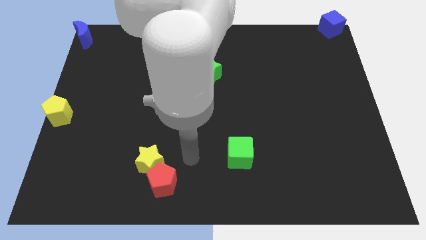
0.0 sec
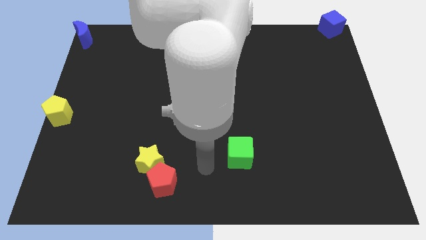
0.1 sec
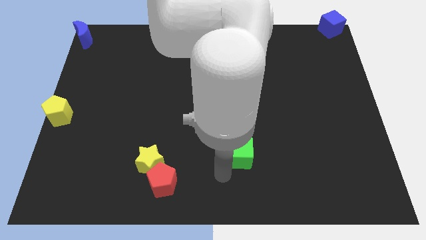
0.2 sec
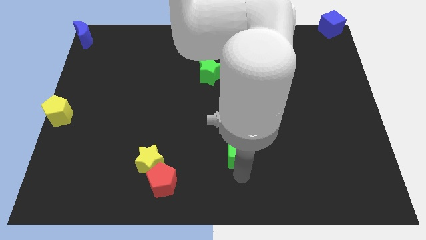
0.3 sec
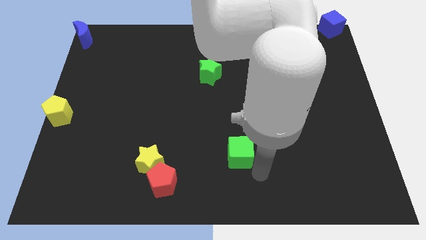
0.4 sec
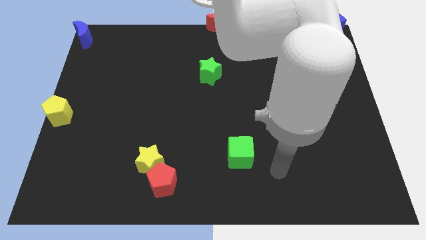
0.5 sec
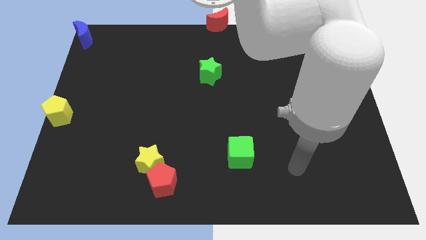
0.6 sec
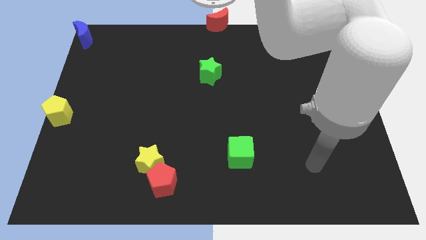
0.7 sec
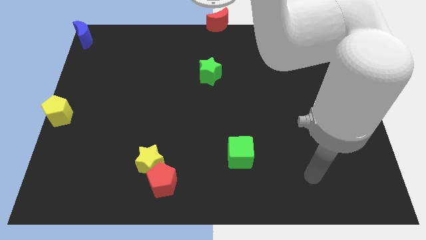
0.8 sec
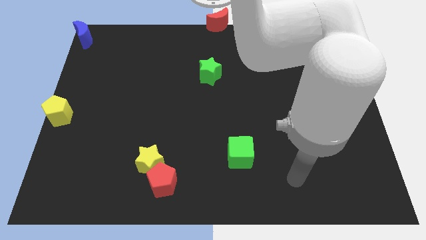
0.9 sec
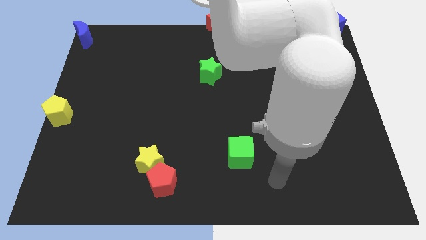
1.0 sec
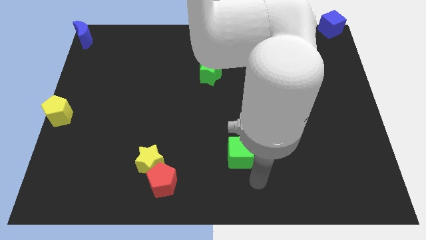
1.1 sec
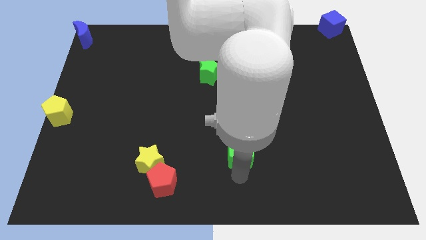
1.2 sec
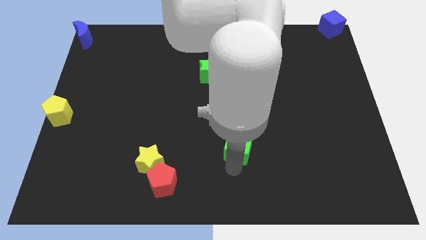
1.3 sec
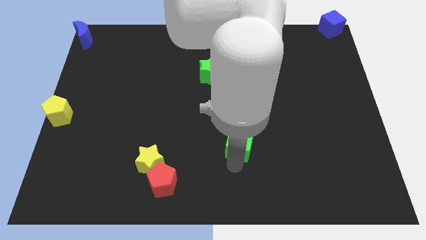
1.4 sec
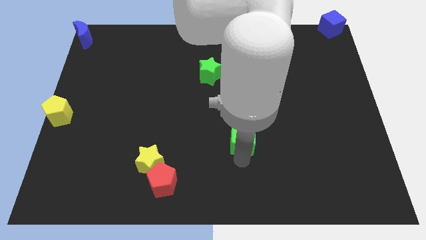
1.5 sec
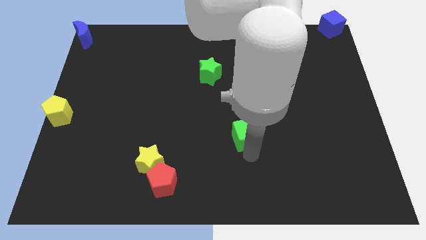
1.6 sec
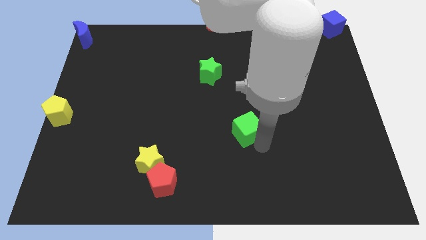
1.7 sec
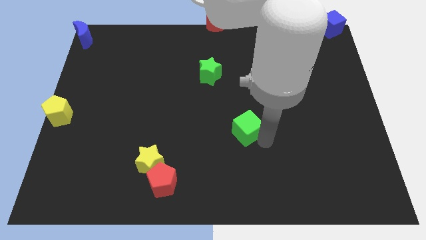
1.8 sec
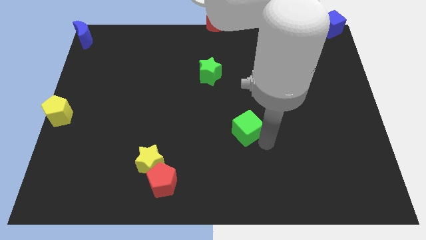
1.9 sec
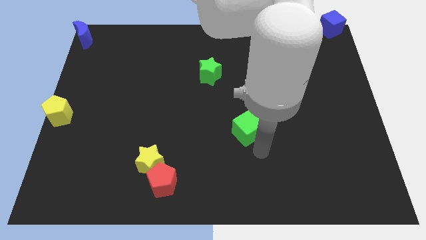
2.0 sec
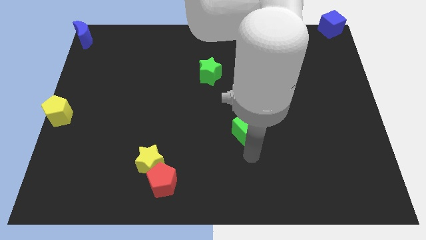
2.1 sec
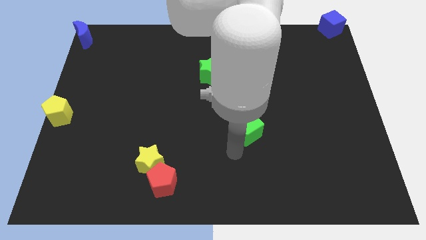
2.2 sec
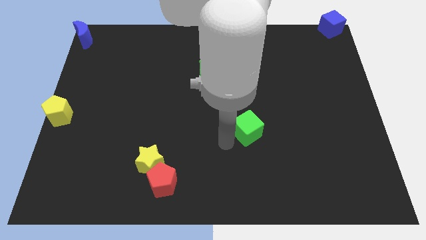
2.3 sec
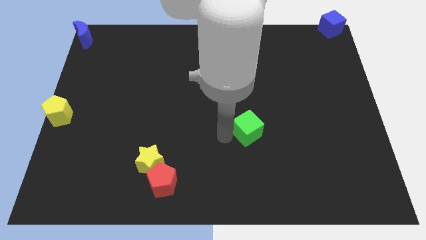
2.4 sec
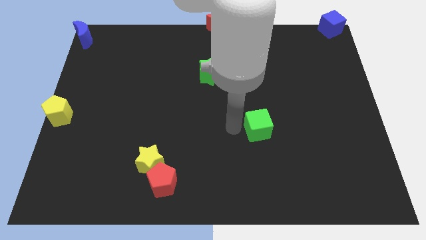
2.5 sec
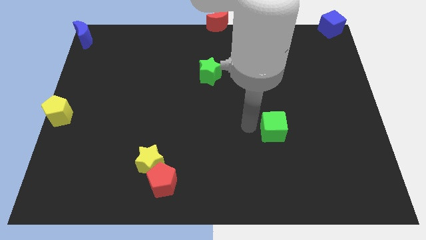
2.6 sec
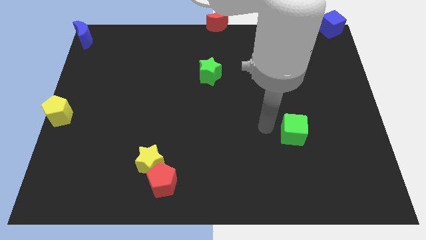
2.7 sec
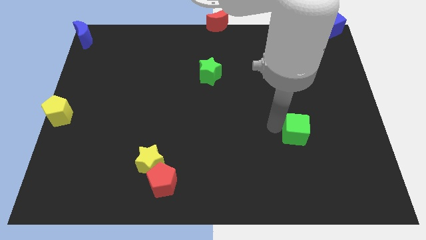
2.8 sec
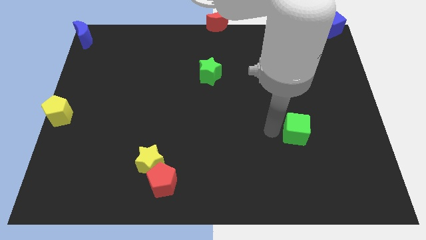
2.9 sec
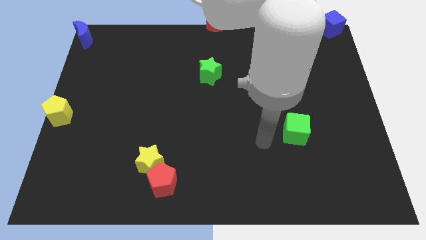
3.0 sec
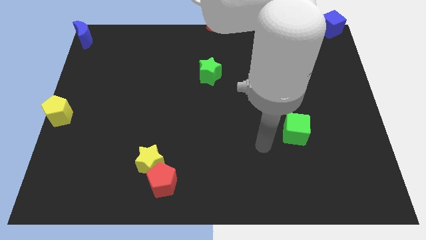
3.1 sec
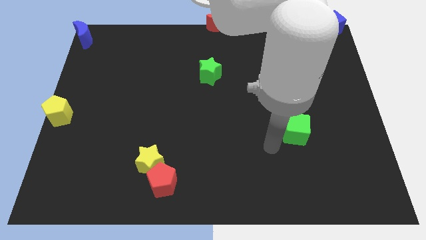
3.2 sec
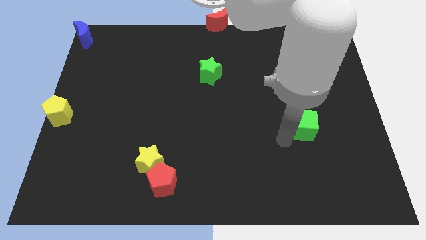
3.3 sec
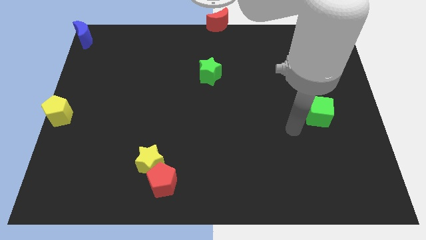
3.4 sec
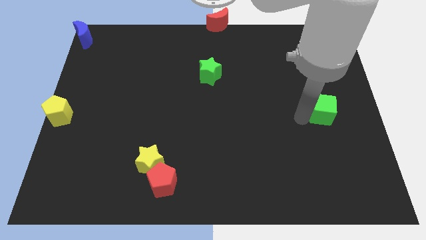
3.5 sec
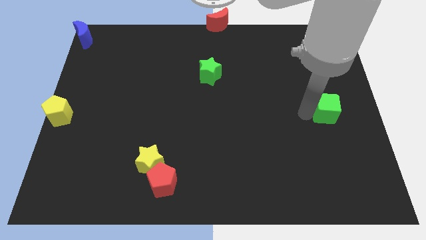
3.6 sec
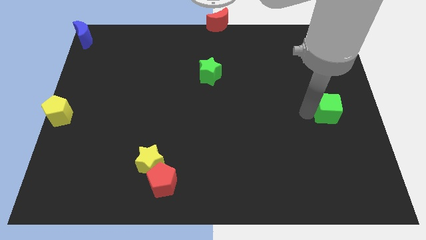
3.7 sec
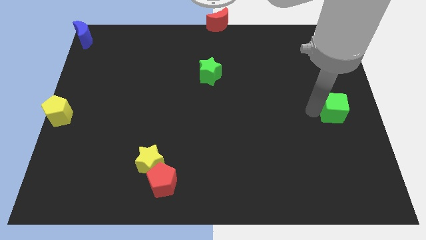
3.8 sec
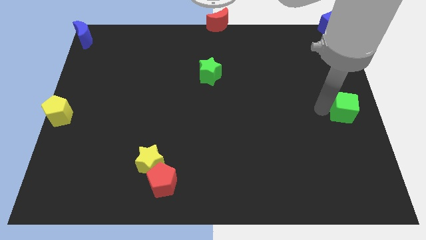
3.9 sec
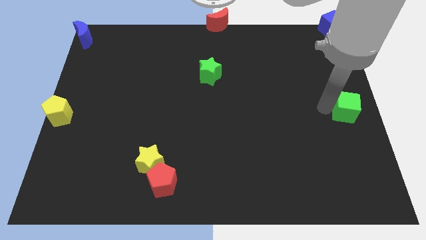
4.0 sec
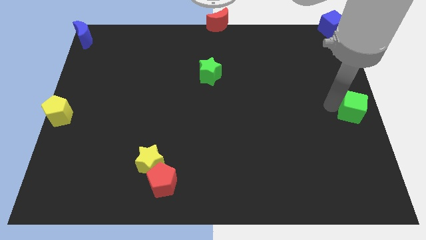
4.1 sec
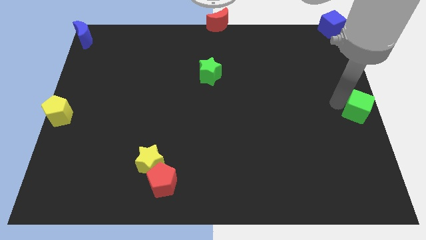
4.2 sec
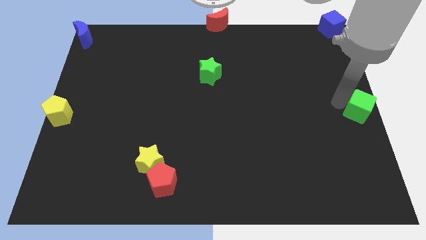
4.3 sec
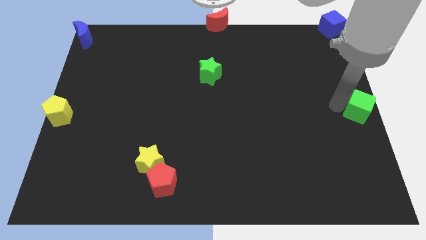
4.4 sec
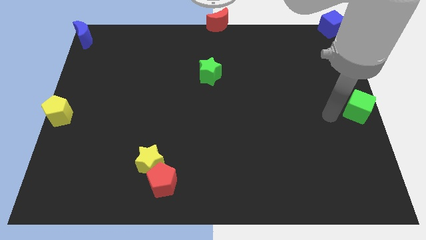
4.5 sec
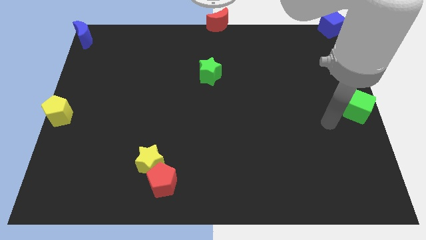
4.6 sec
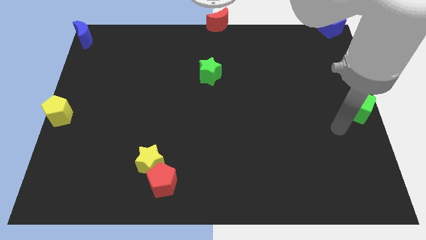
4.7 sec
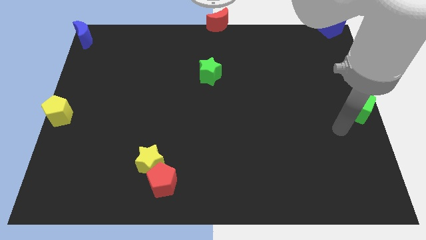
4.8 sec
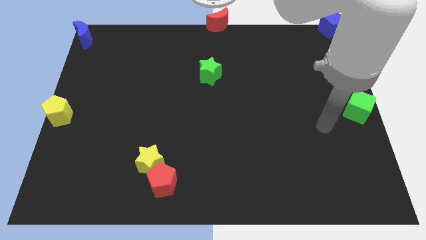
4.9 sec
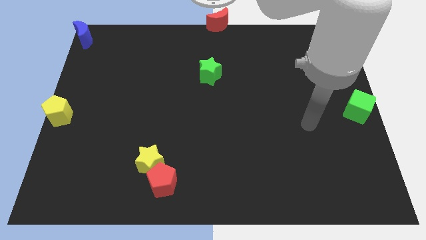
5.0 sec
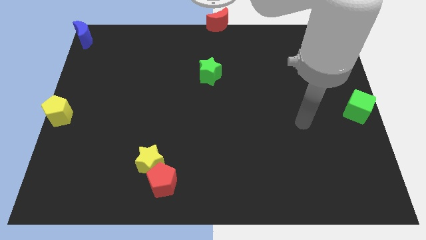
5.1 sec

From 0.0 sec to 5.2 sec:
move the green cube to the right center of the board

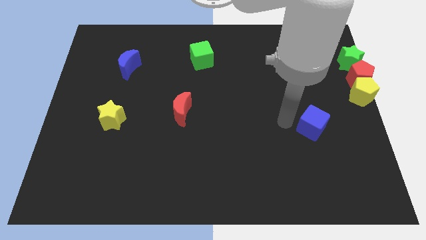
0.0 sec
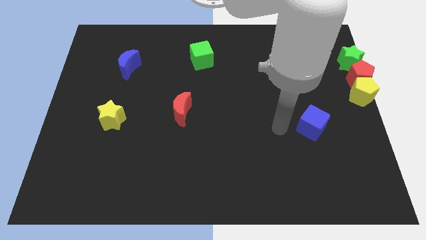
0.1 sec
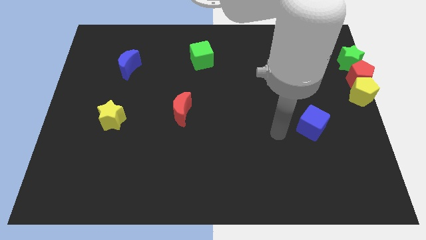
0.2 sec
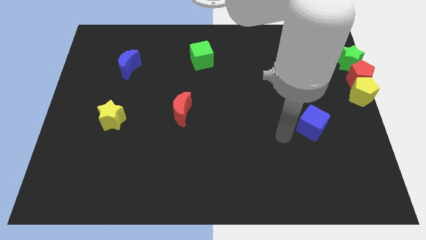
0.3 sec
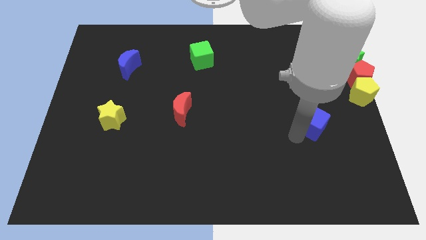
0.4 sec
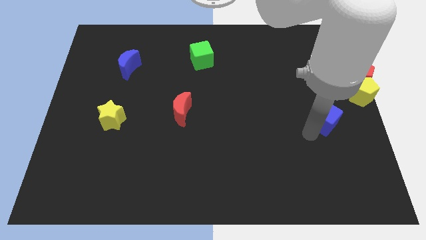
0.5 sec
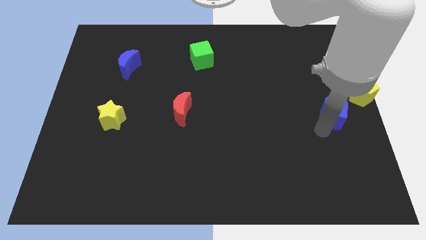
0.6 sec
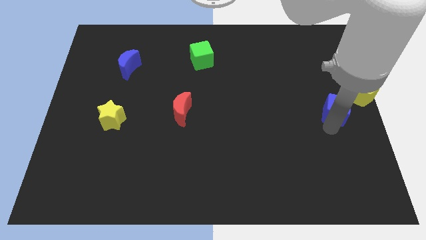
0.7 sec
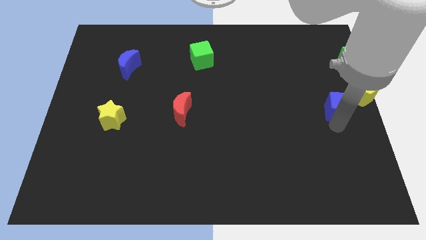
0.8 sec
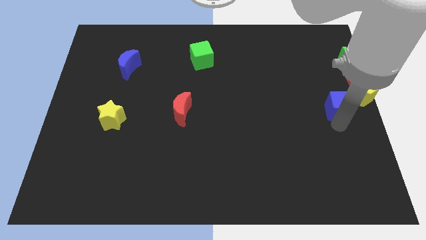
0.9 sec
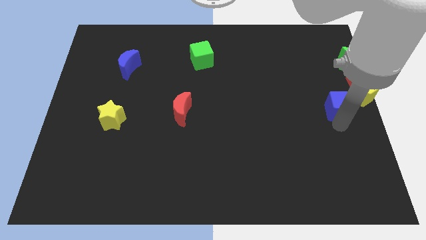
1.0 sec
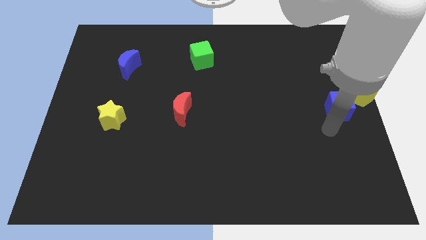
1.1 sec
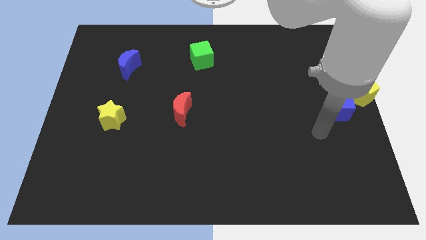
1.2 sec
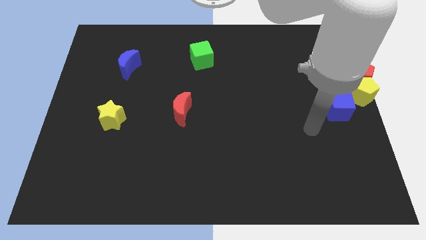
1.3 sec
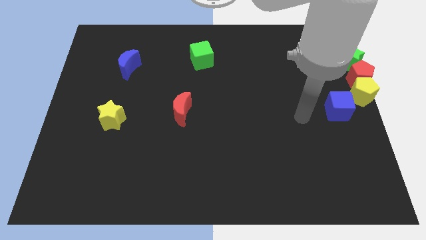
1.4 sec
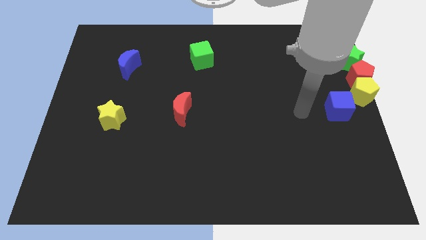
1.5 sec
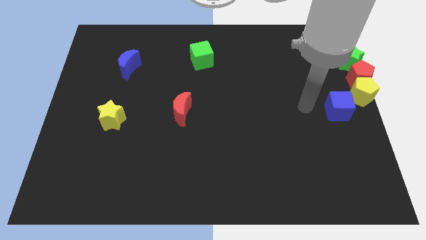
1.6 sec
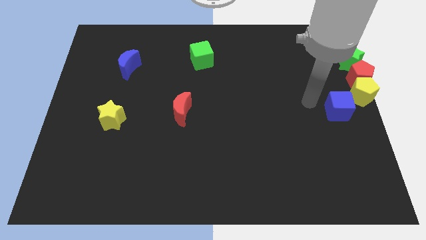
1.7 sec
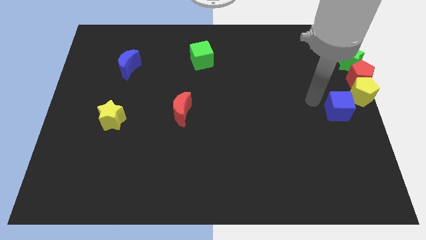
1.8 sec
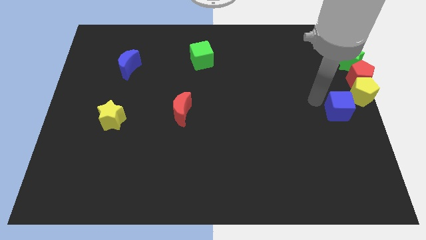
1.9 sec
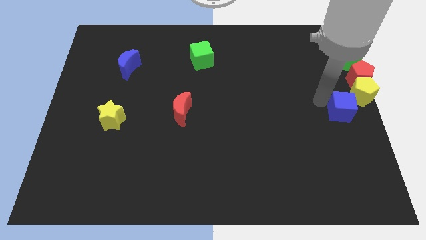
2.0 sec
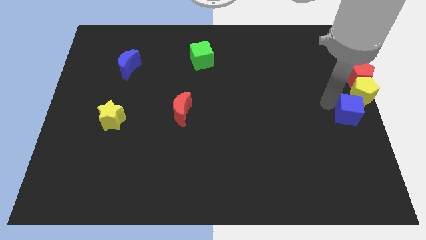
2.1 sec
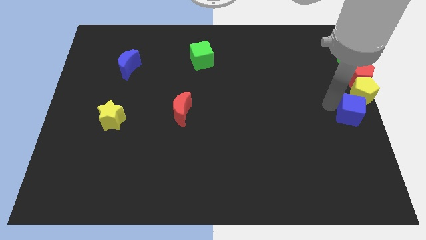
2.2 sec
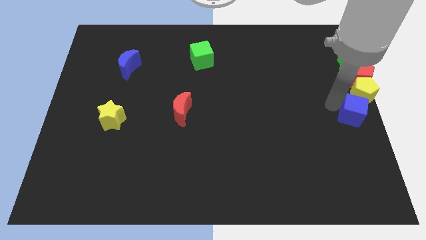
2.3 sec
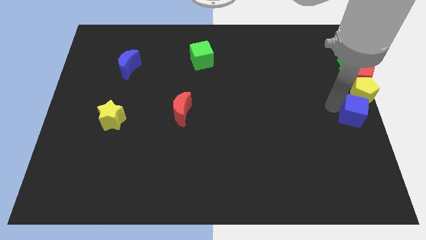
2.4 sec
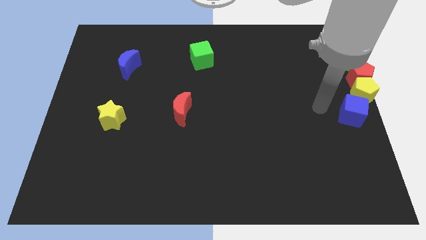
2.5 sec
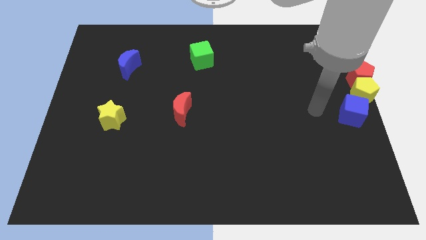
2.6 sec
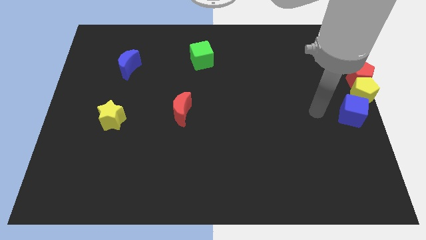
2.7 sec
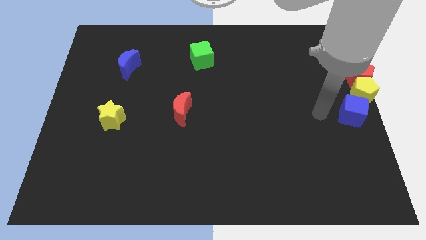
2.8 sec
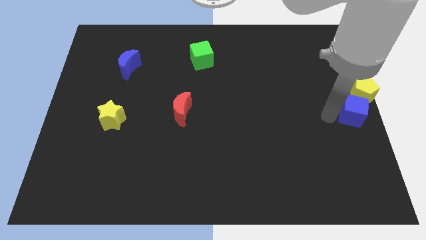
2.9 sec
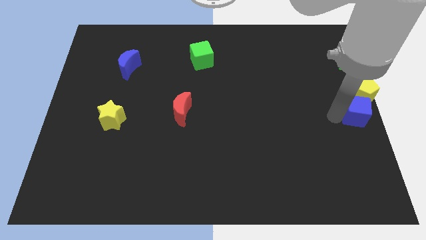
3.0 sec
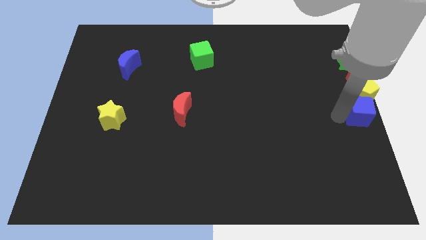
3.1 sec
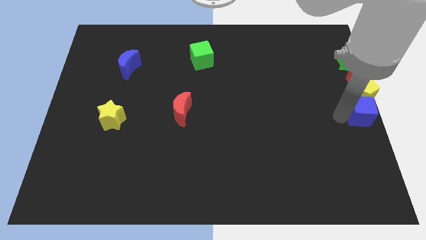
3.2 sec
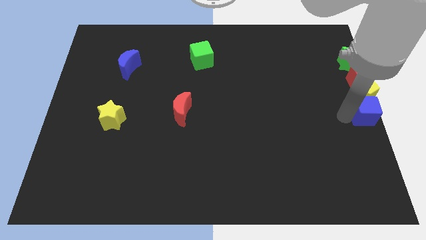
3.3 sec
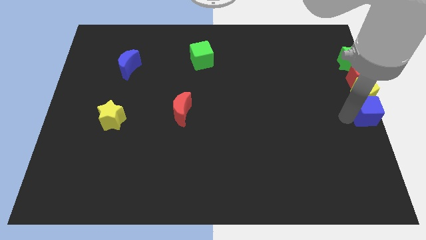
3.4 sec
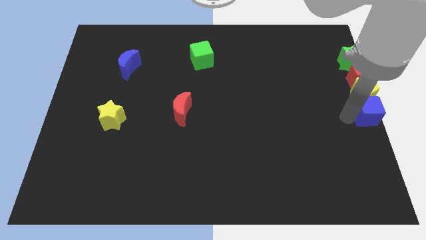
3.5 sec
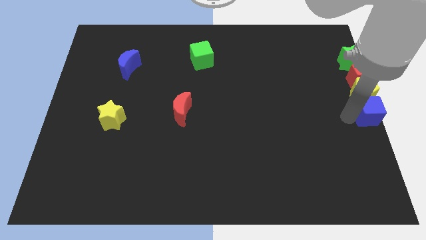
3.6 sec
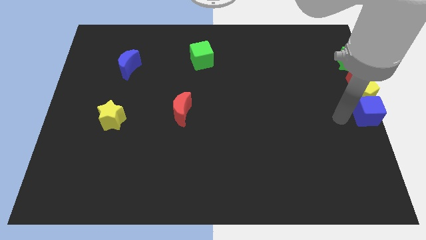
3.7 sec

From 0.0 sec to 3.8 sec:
put the blue cube at the bottom of the yellow pentagon
